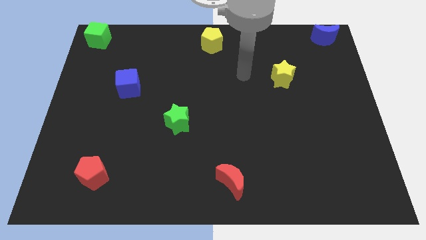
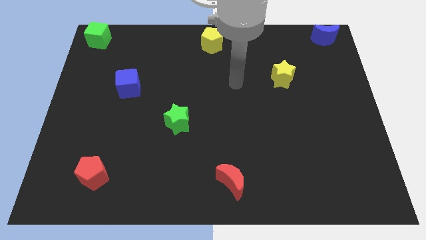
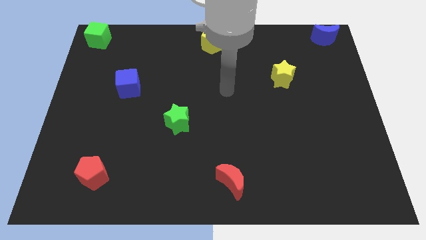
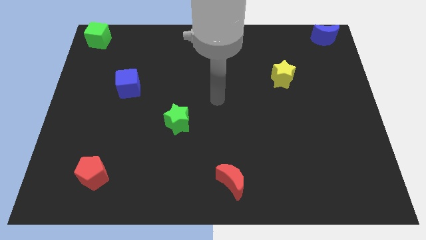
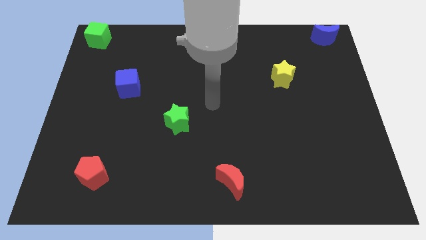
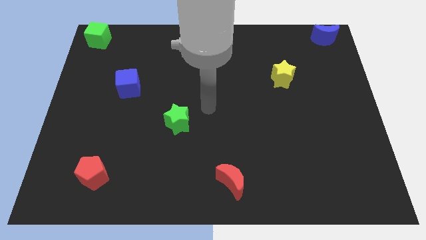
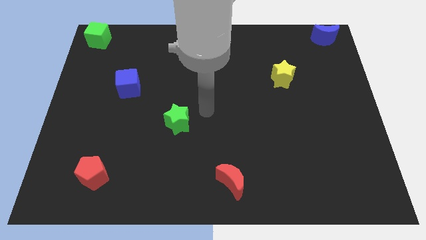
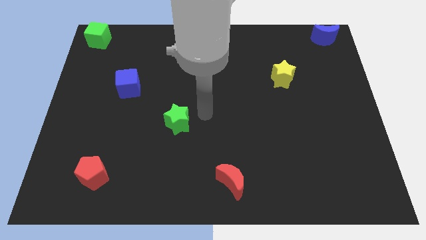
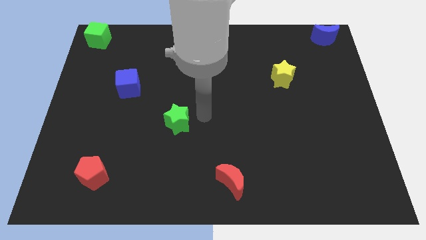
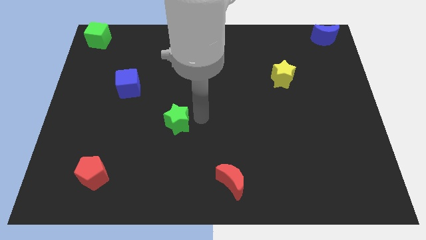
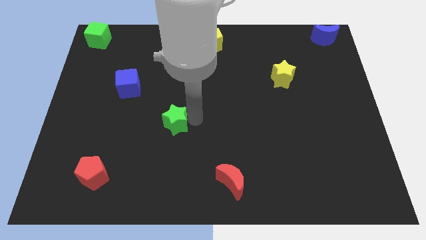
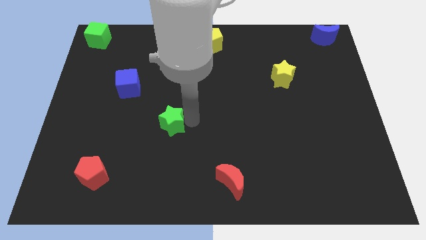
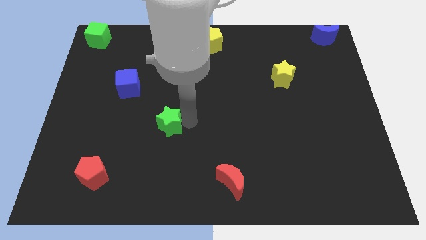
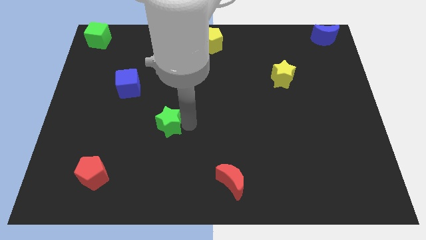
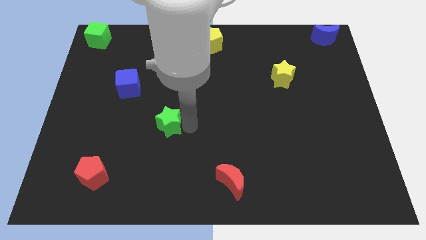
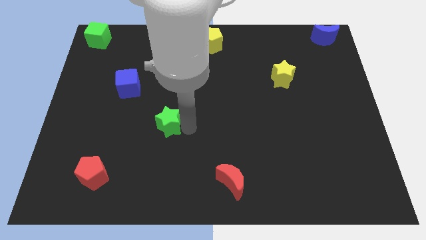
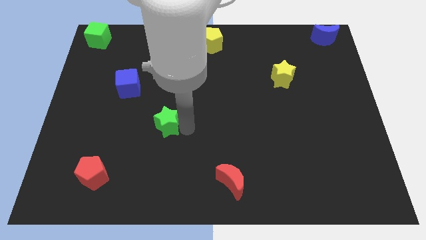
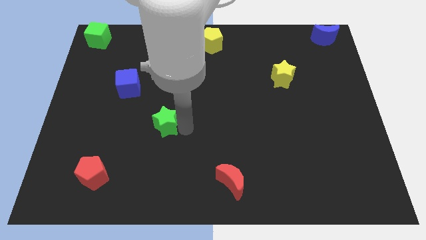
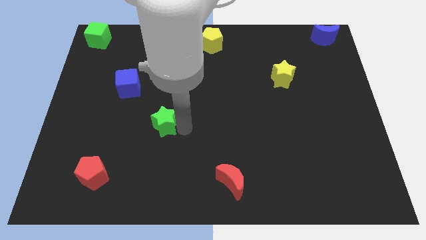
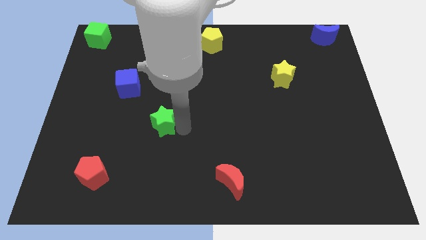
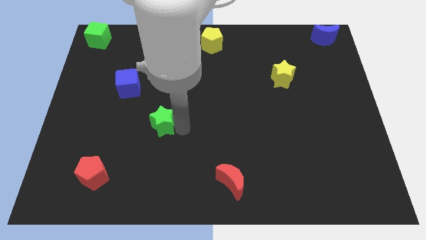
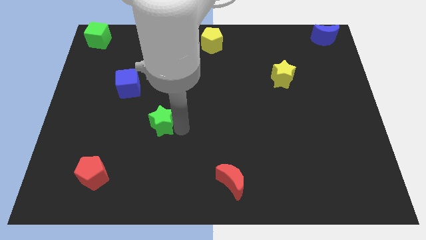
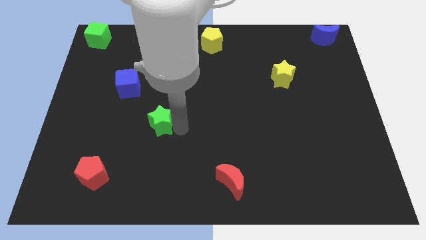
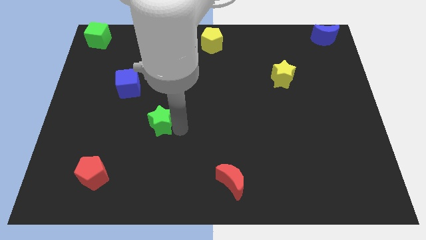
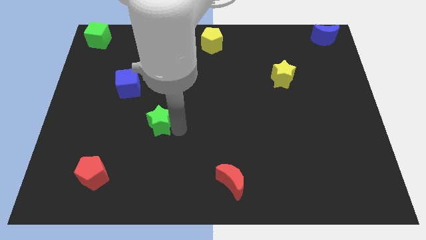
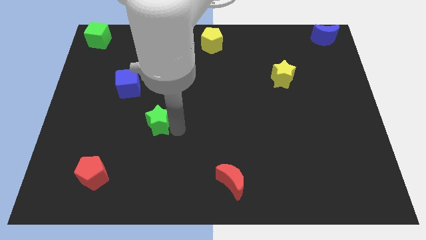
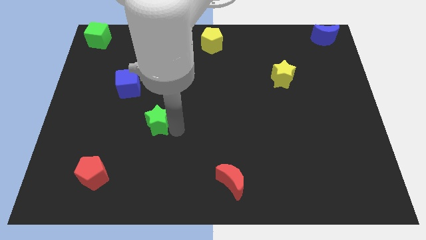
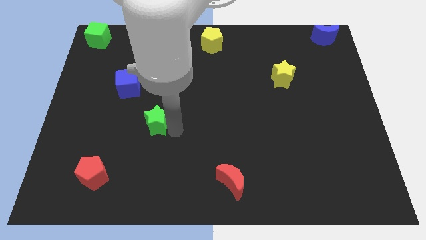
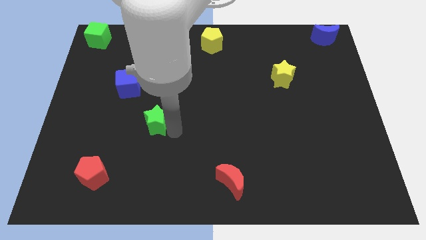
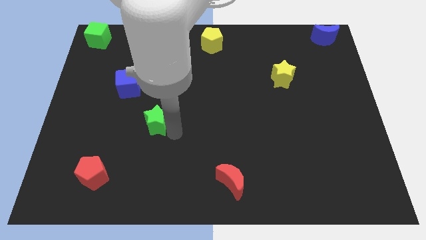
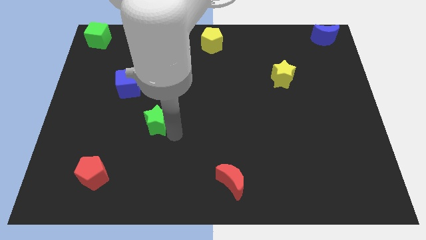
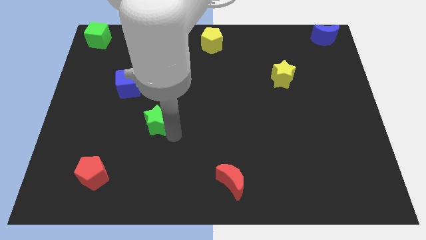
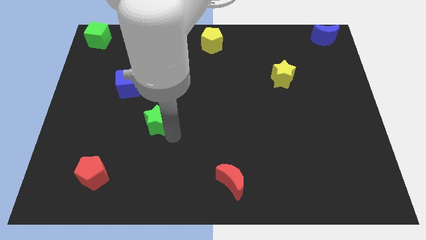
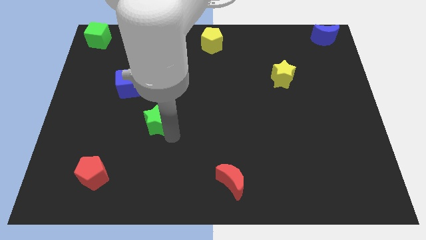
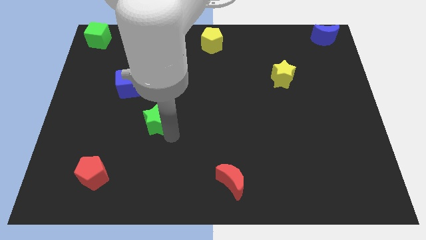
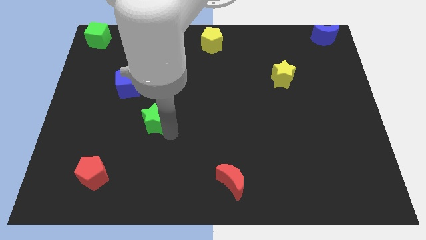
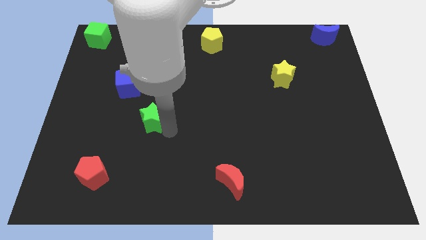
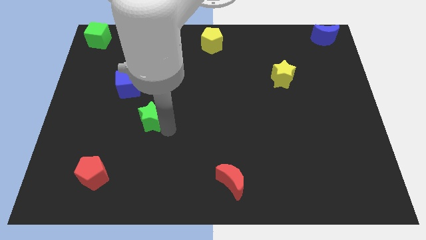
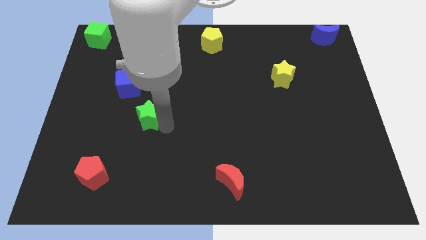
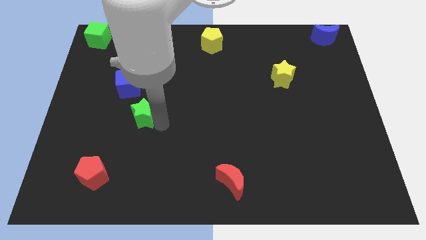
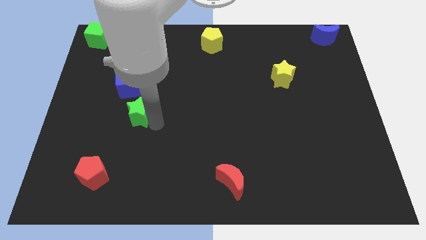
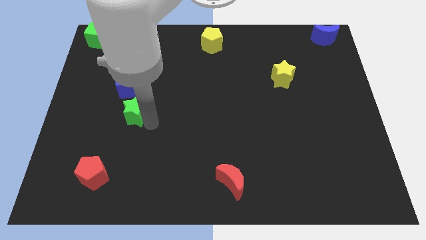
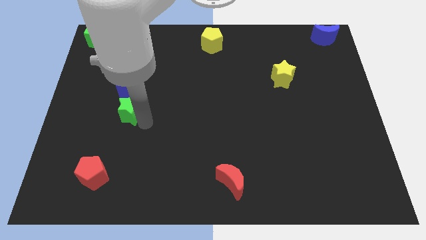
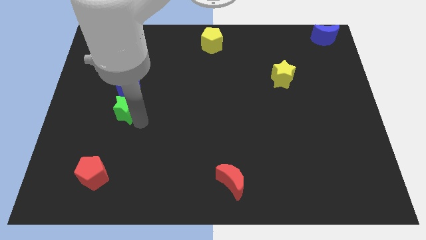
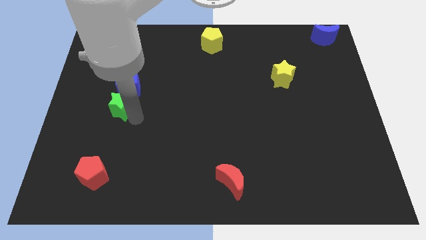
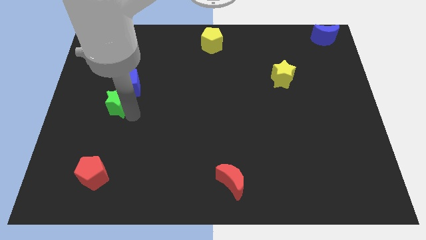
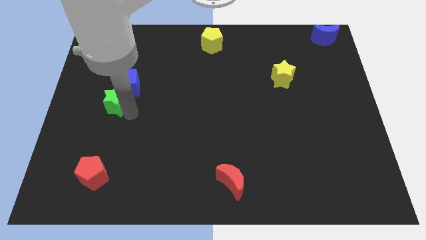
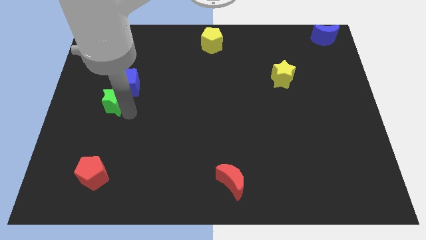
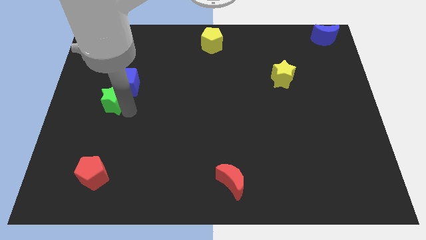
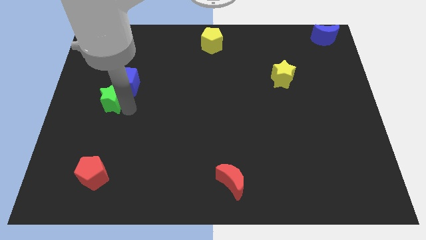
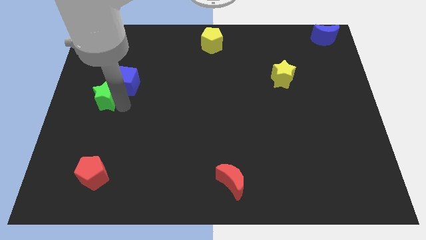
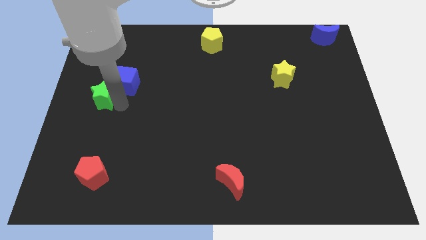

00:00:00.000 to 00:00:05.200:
slide green star into blue cube

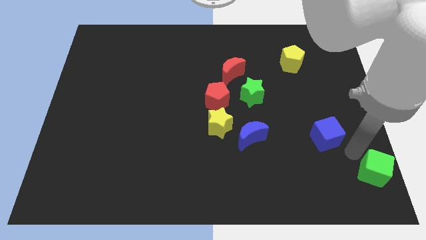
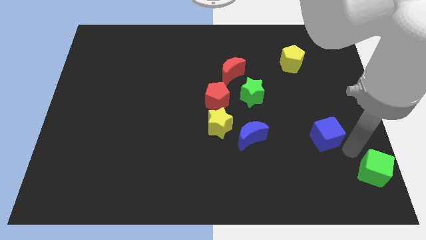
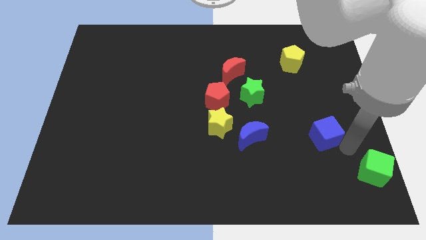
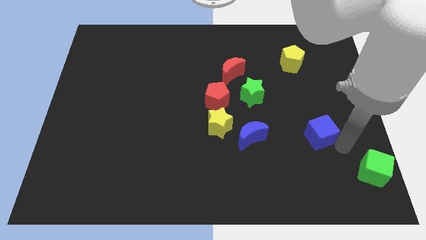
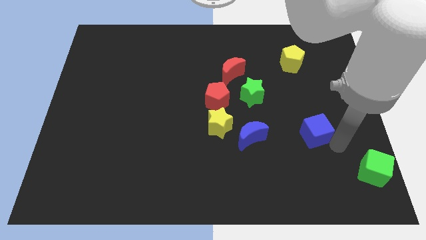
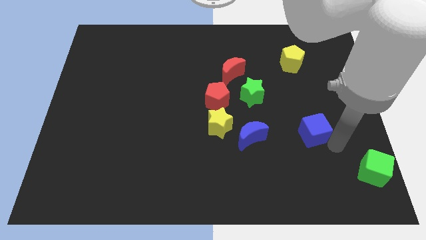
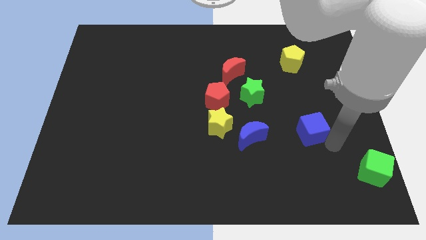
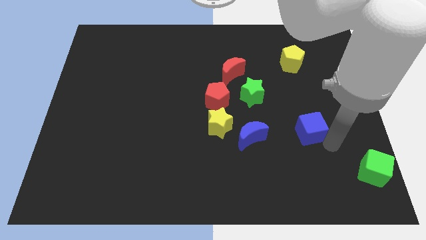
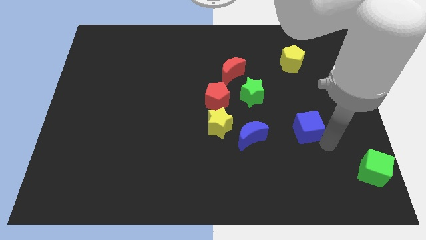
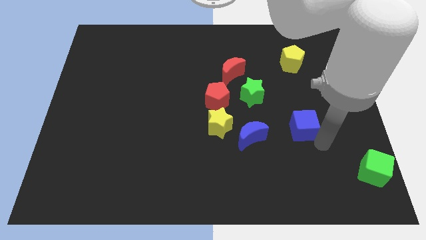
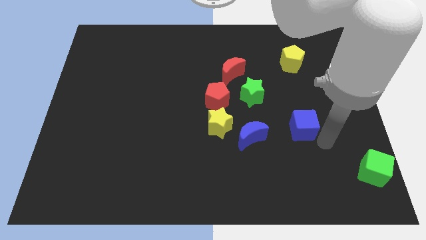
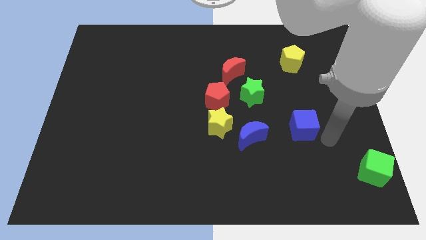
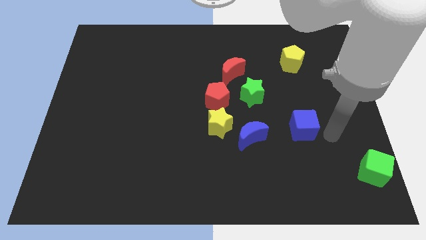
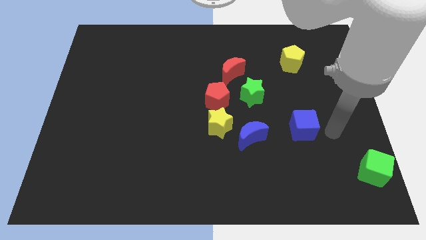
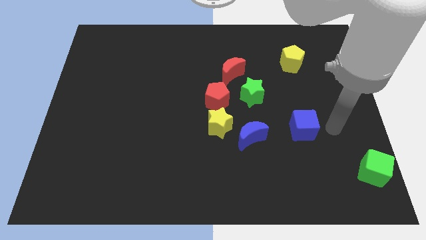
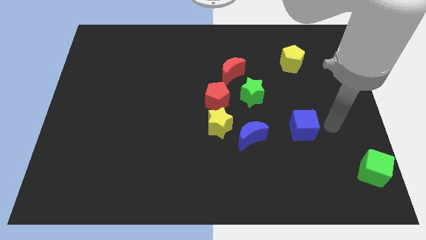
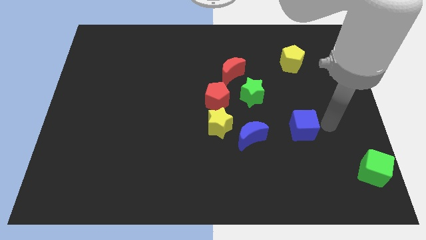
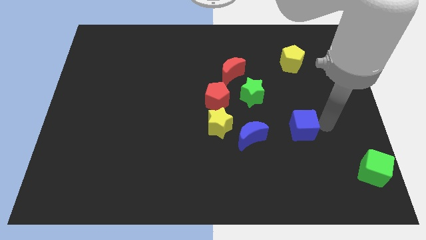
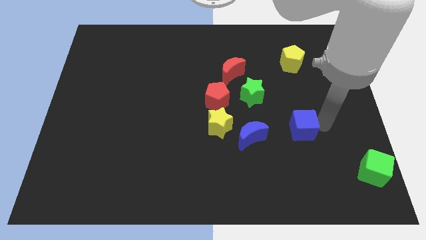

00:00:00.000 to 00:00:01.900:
place the blue cube diagonally in between the green star and green cube

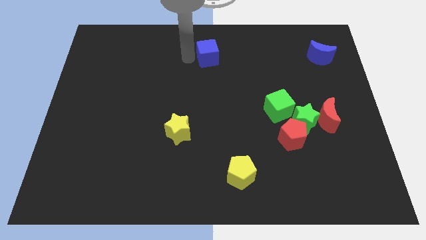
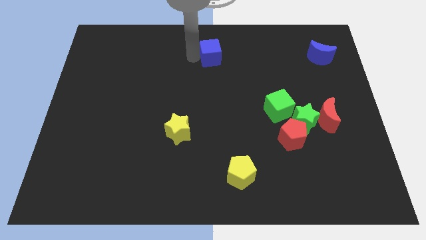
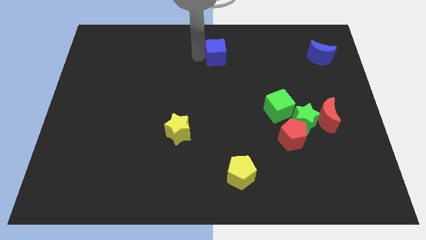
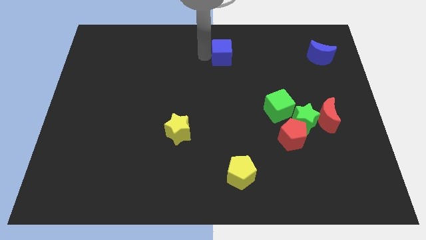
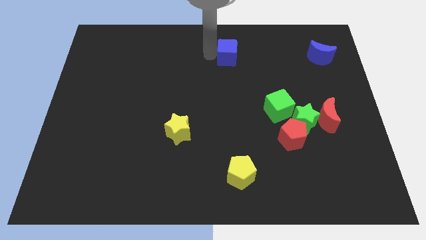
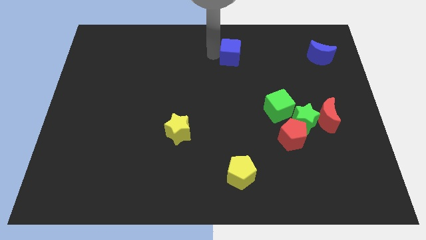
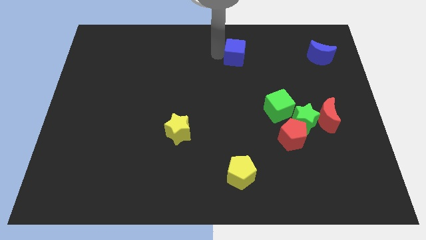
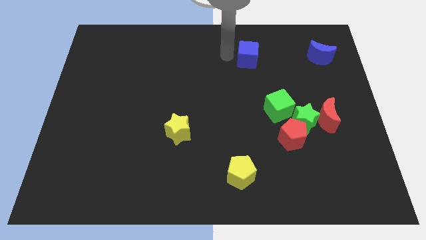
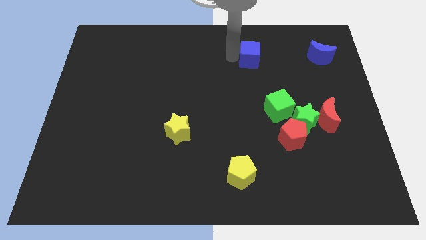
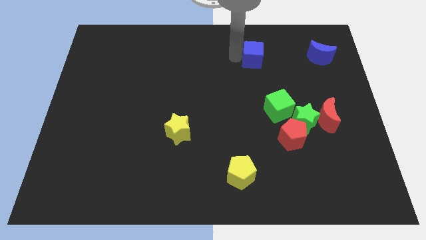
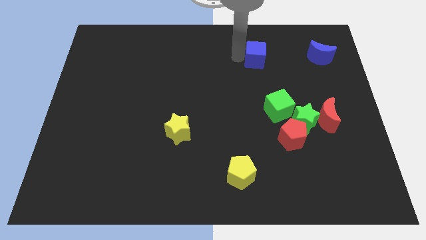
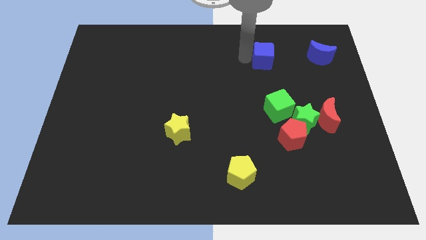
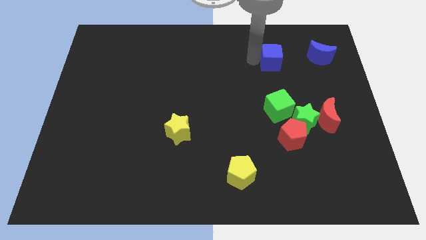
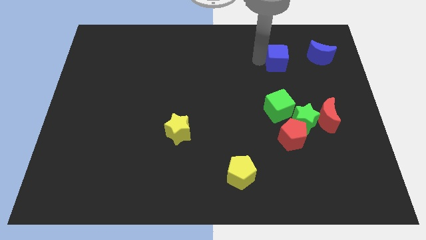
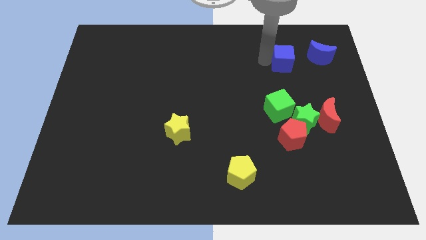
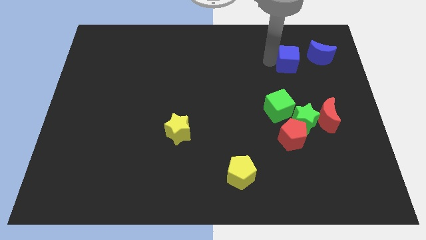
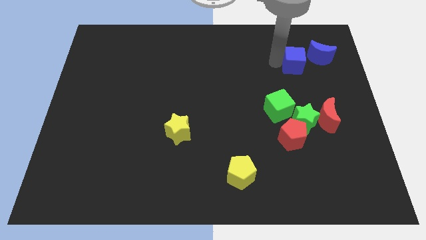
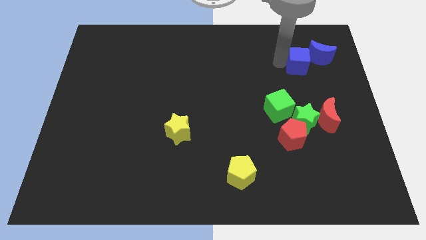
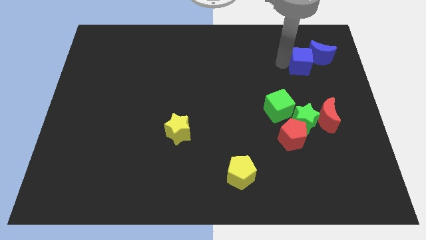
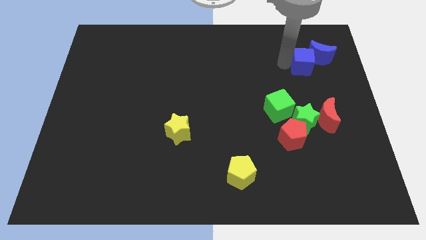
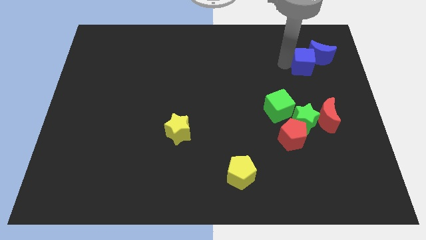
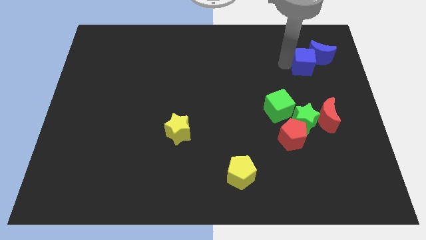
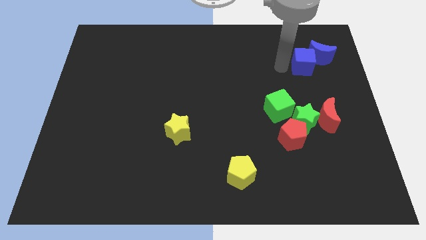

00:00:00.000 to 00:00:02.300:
make the blue cube to touch the blue crescent
